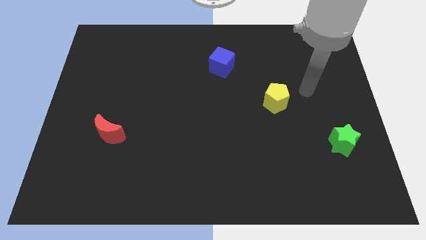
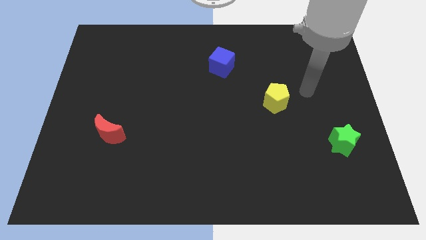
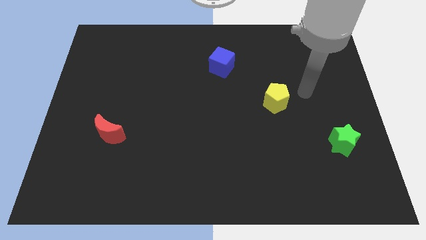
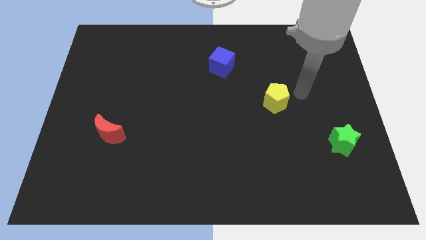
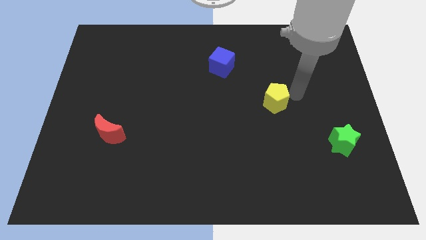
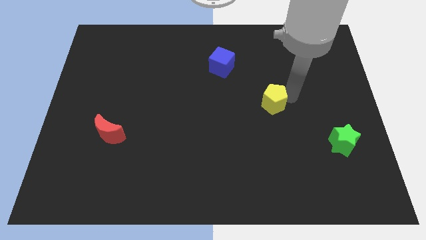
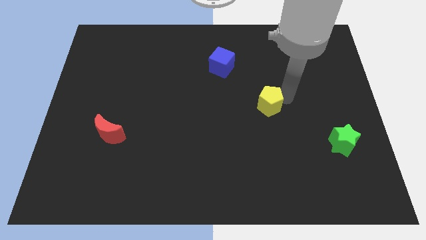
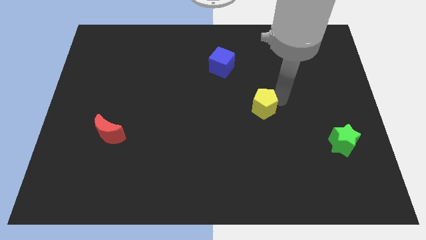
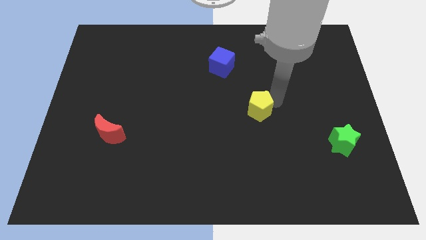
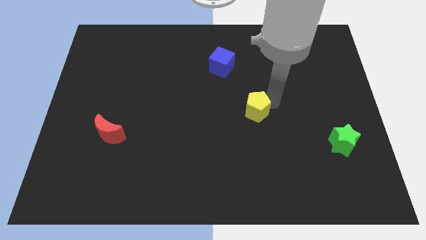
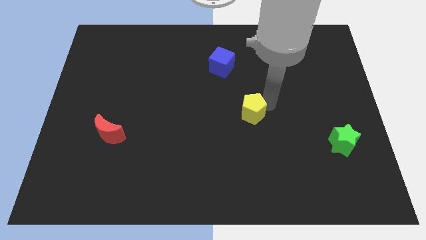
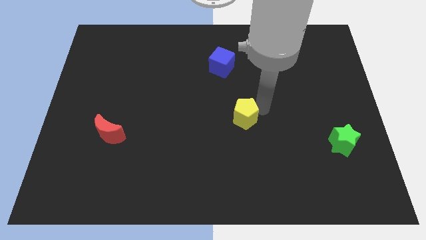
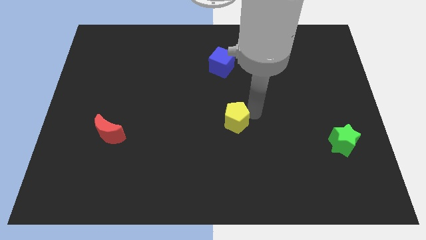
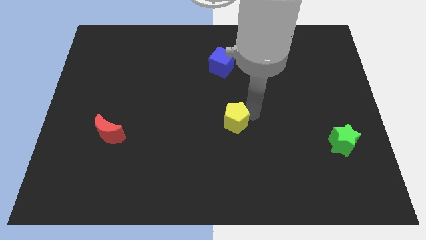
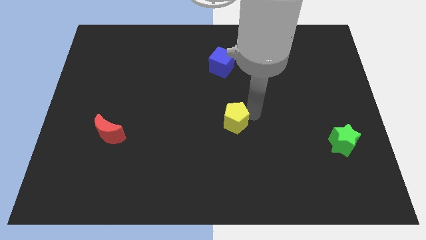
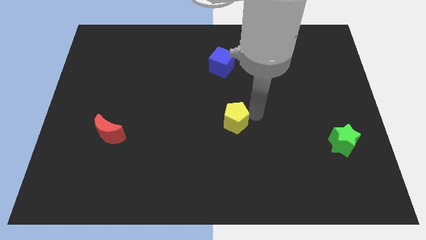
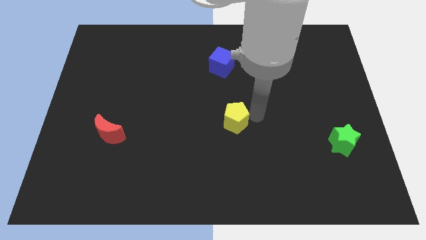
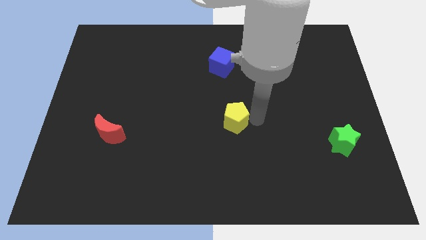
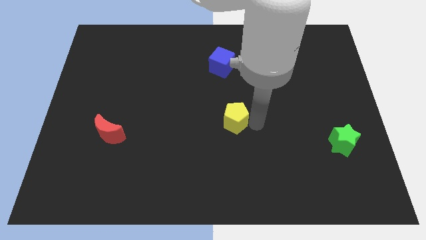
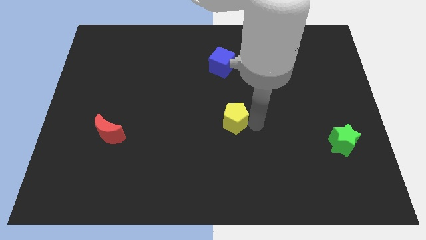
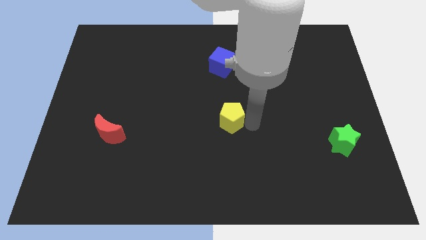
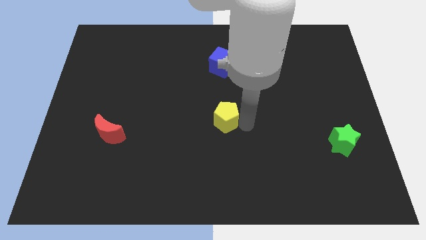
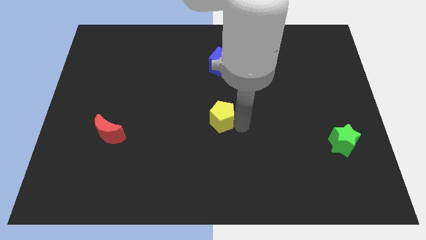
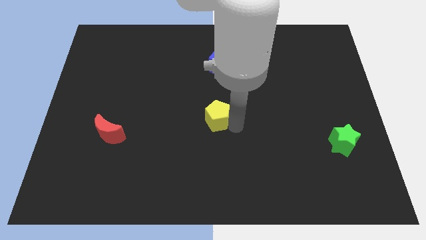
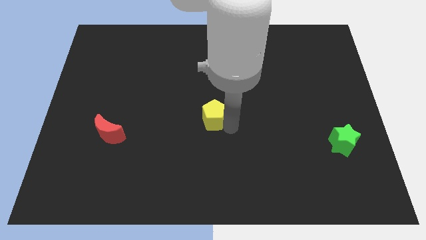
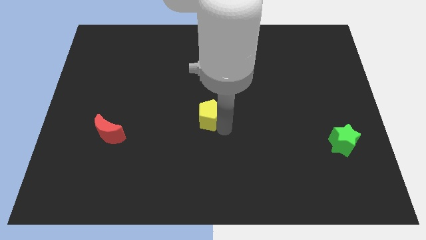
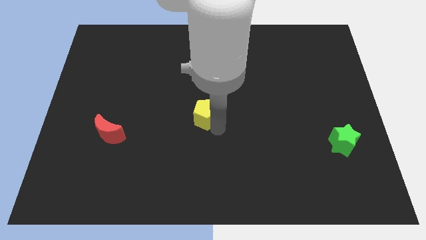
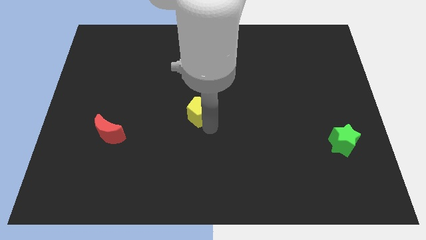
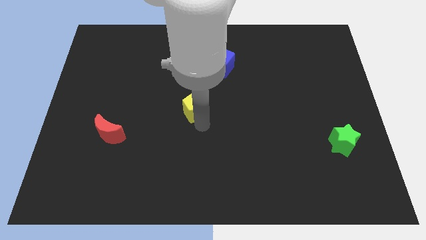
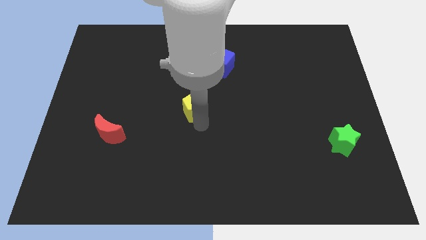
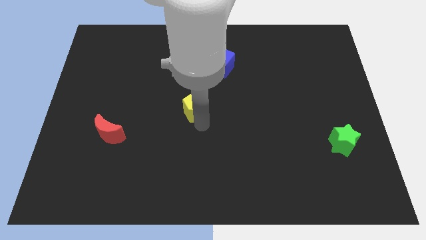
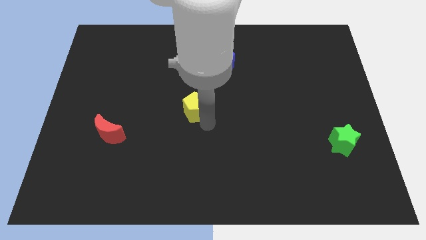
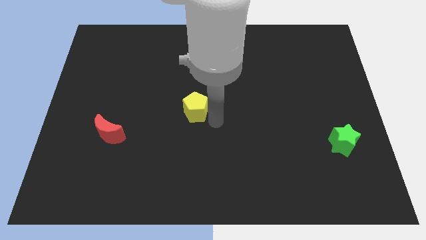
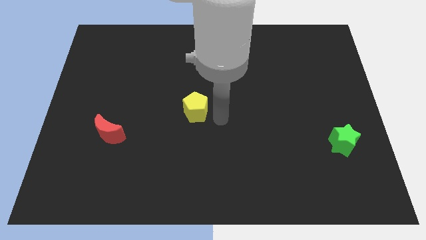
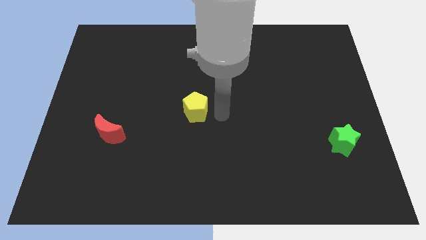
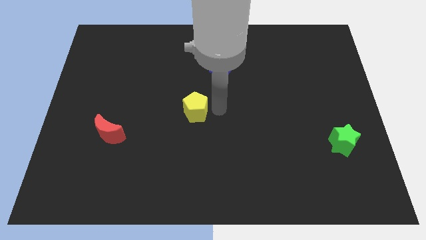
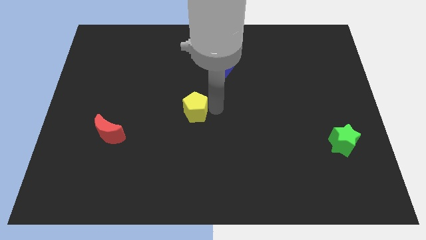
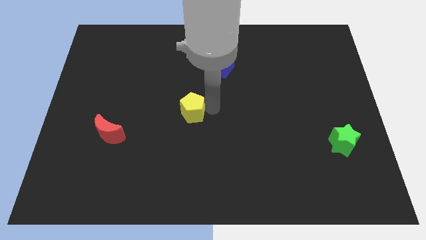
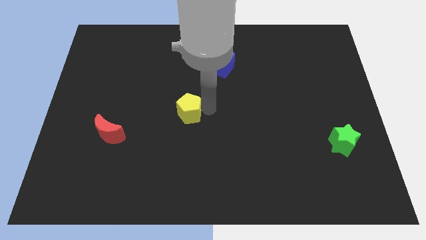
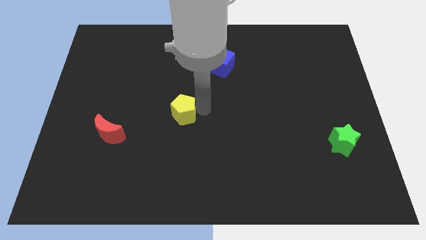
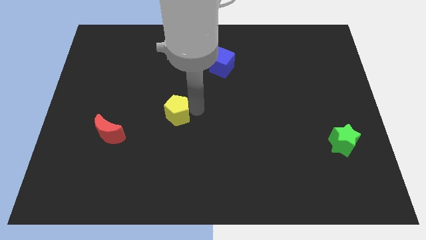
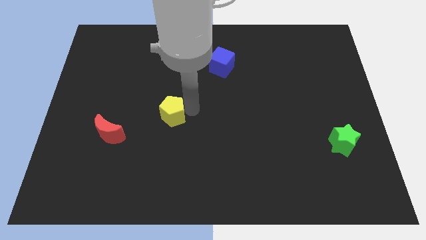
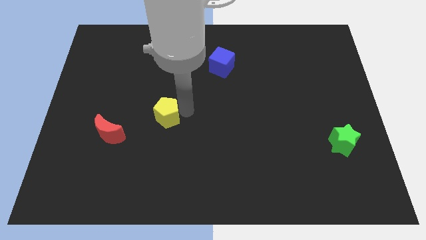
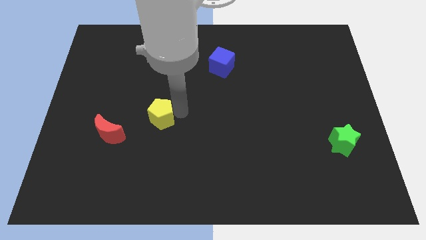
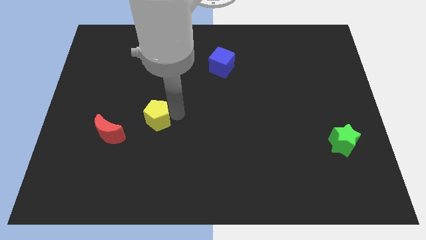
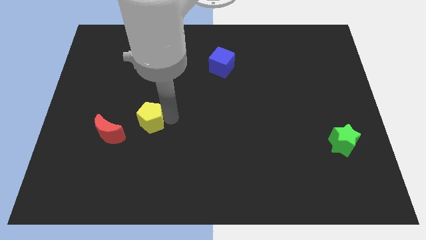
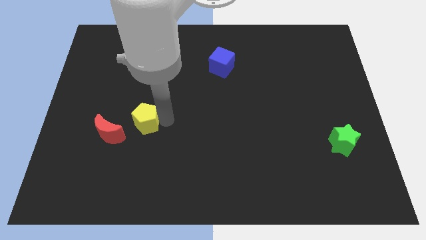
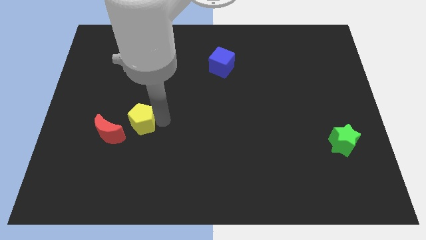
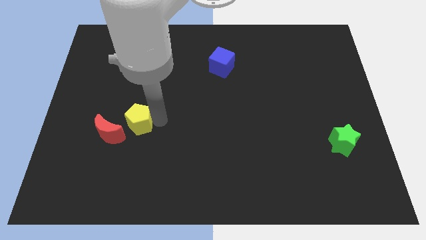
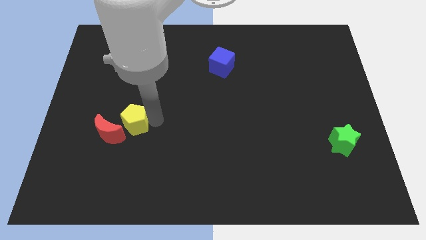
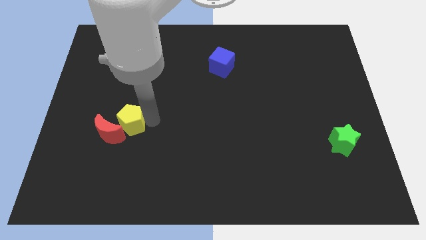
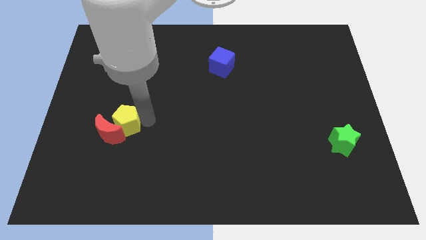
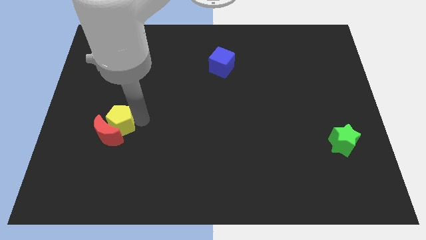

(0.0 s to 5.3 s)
push the yellow pentagon to the moon

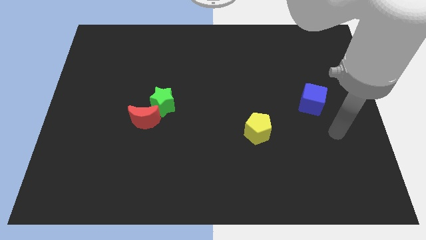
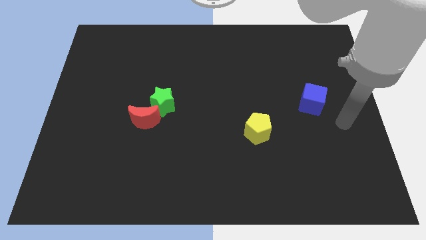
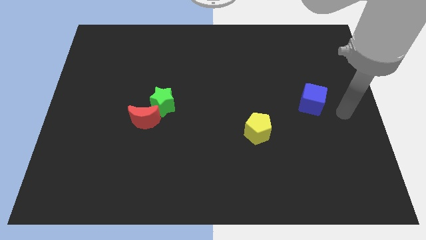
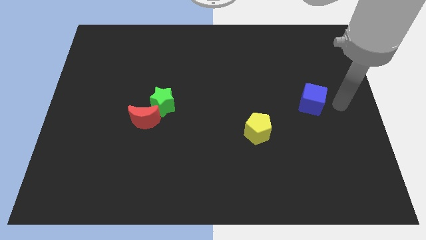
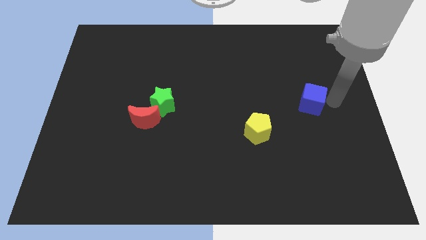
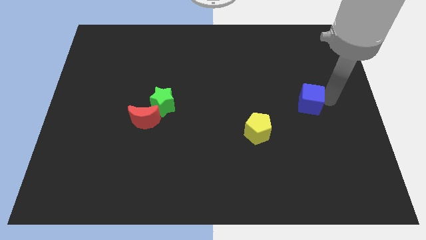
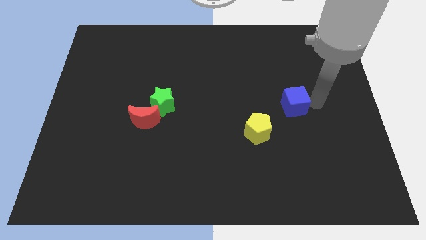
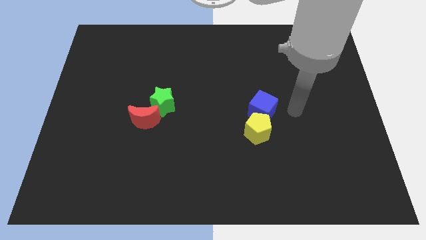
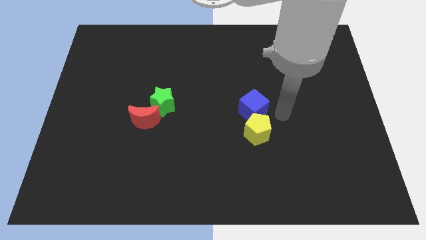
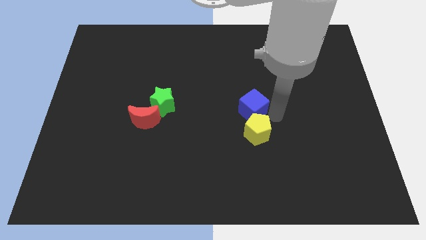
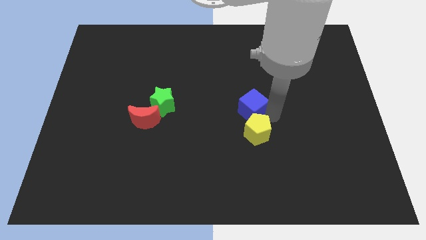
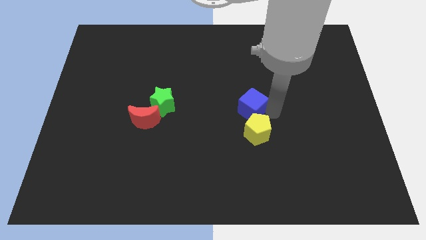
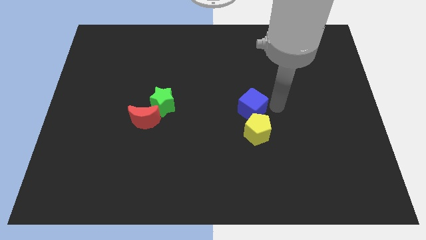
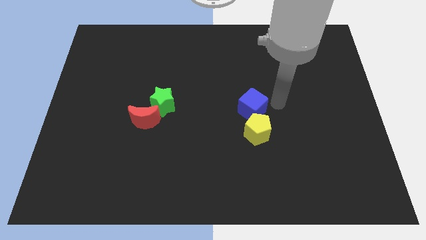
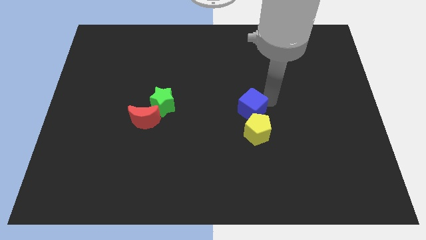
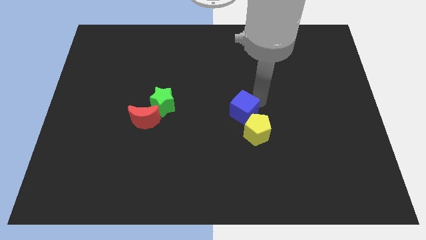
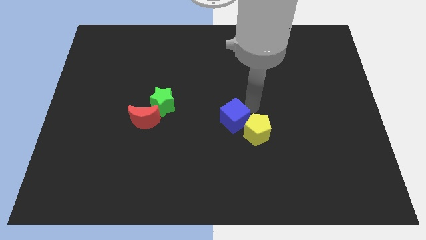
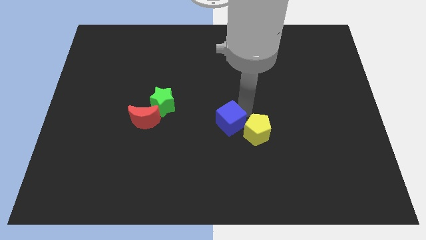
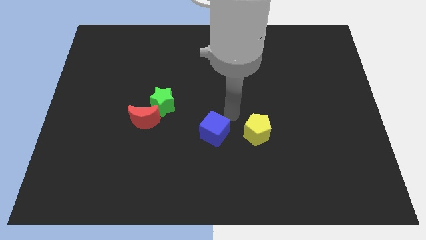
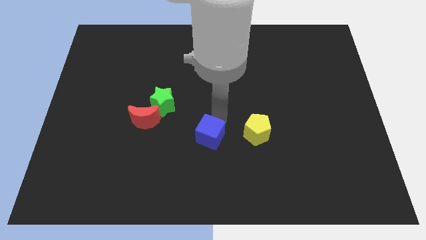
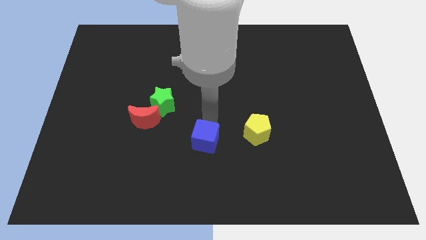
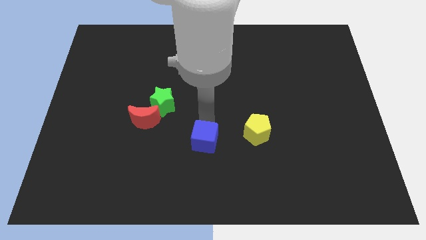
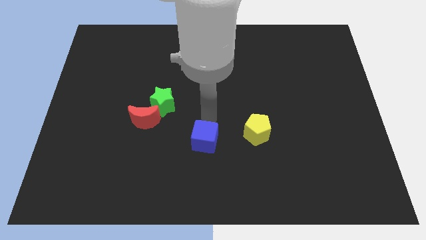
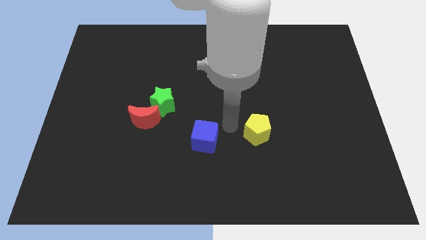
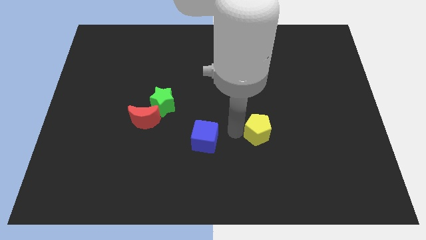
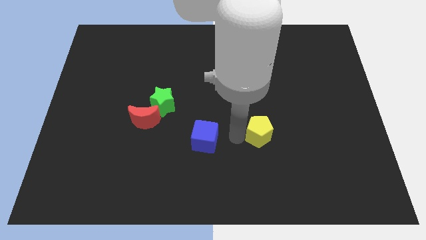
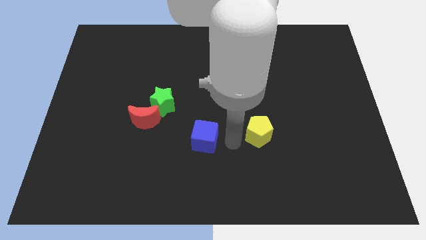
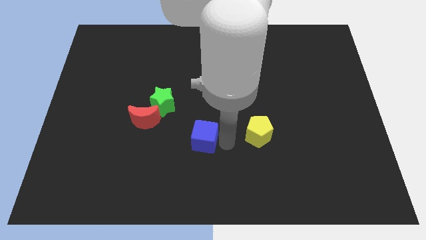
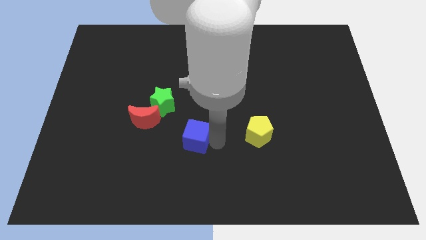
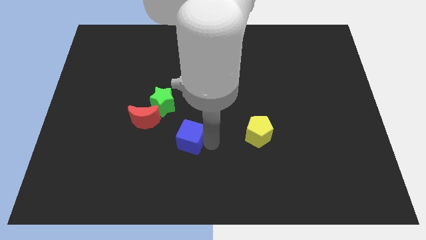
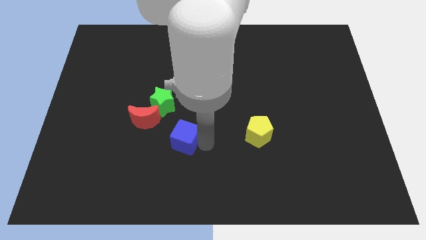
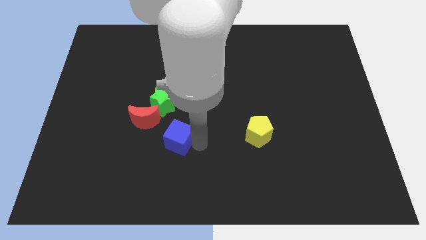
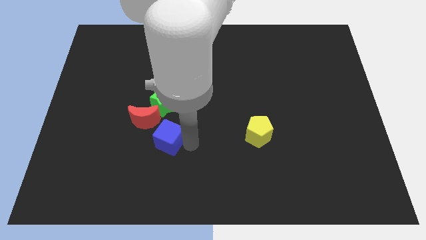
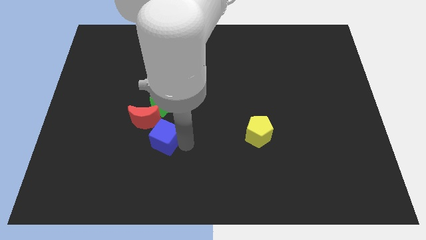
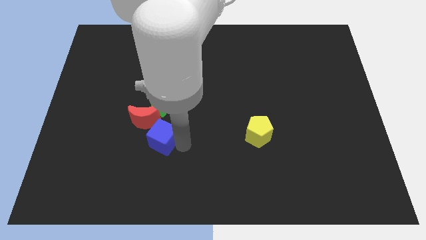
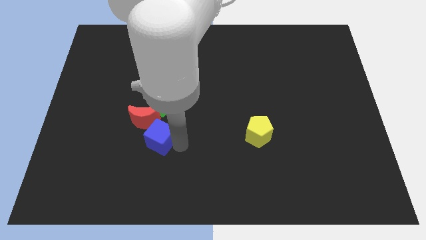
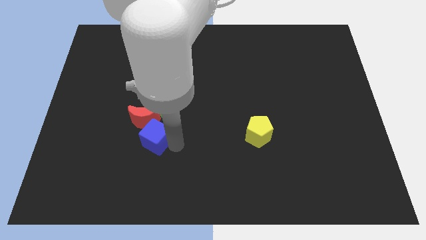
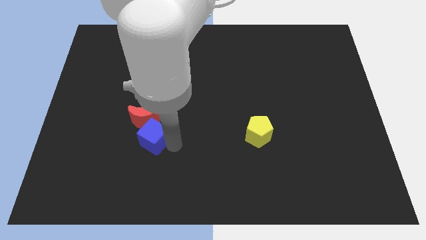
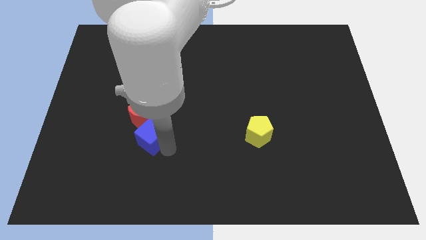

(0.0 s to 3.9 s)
move the blue block to the moon
